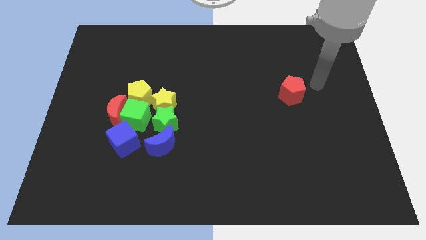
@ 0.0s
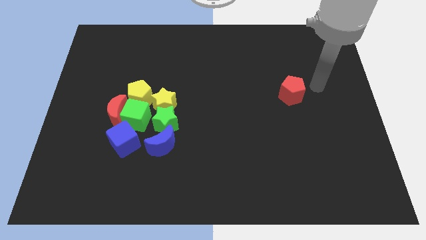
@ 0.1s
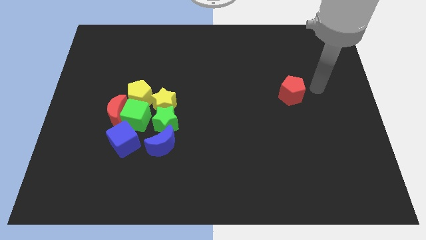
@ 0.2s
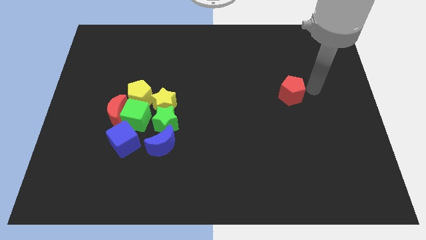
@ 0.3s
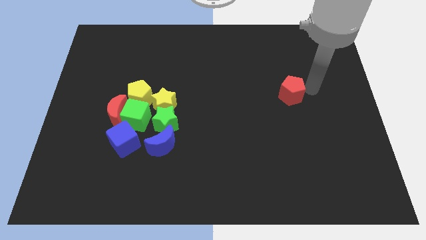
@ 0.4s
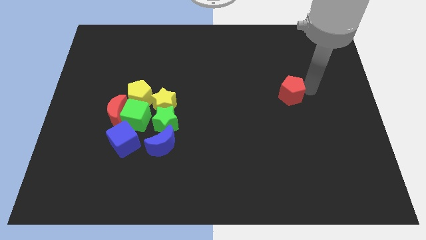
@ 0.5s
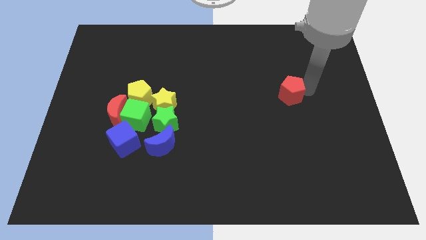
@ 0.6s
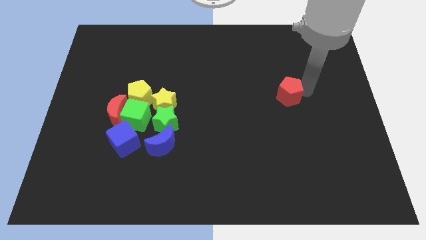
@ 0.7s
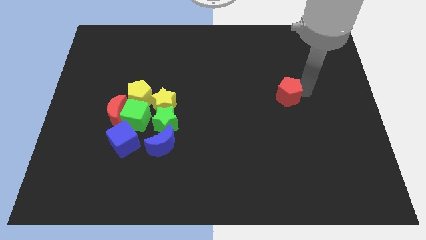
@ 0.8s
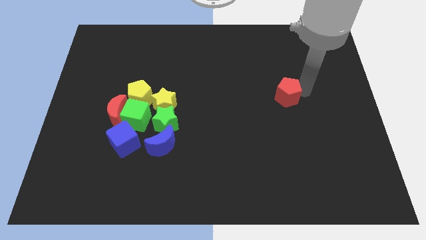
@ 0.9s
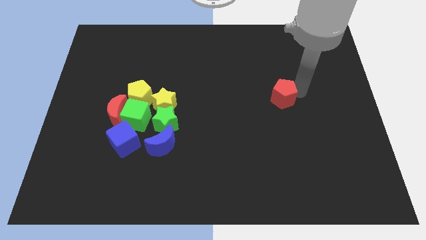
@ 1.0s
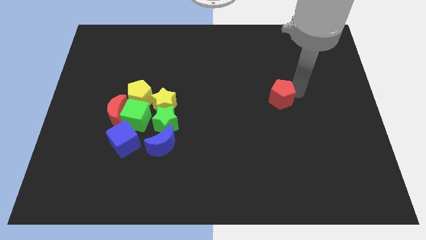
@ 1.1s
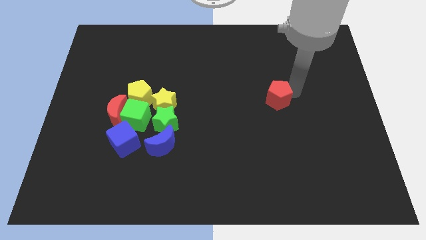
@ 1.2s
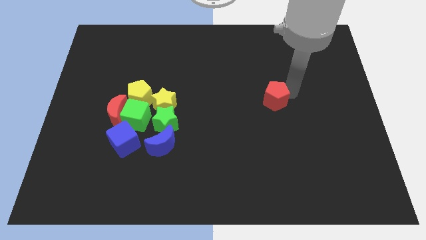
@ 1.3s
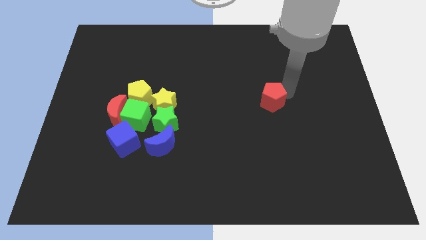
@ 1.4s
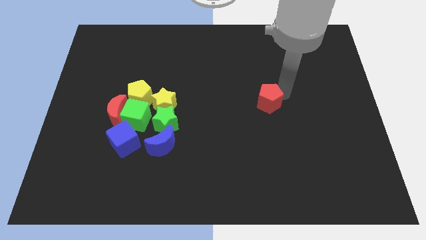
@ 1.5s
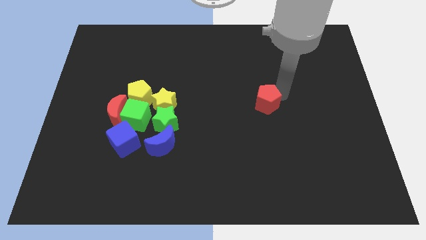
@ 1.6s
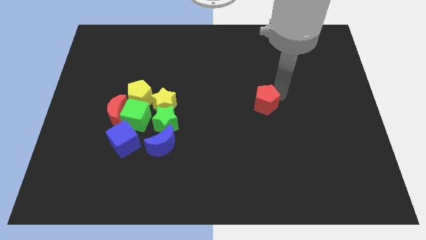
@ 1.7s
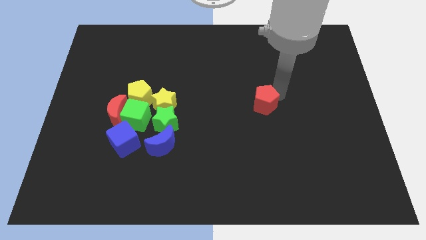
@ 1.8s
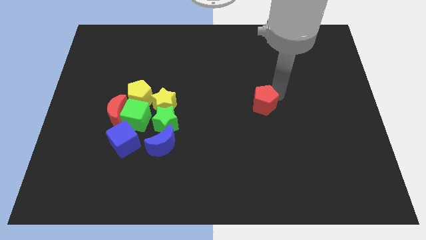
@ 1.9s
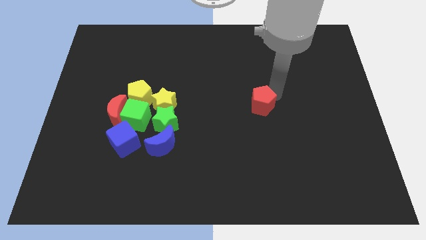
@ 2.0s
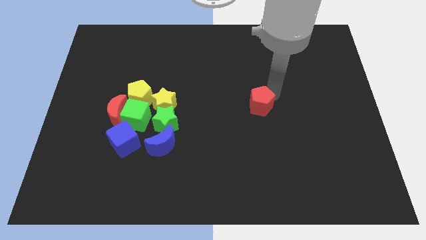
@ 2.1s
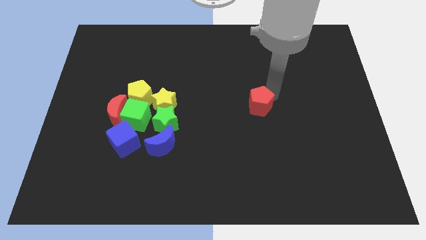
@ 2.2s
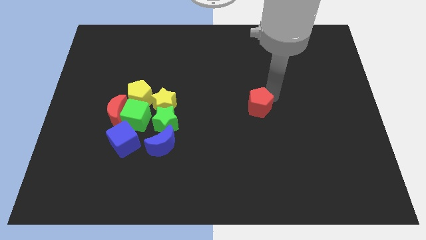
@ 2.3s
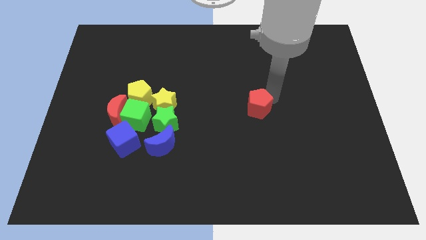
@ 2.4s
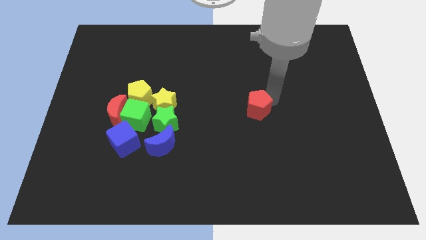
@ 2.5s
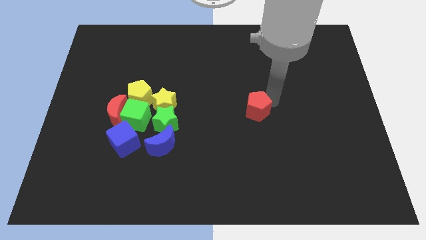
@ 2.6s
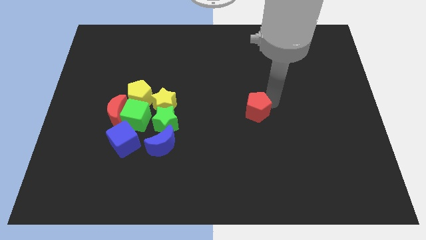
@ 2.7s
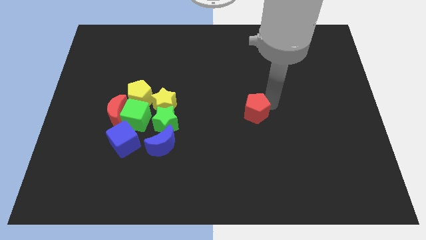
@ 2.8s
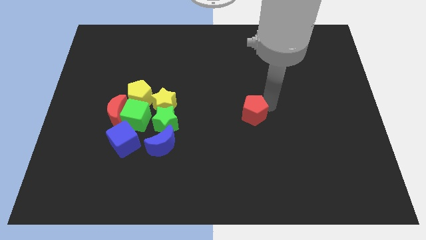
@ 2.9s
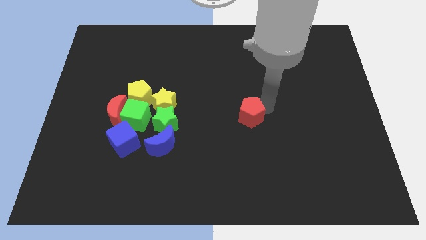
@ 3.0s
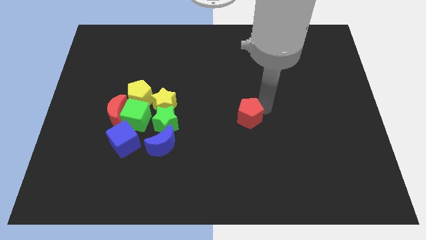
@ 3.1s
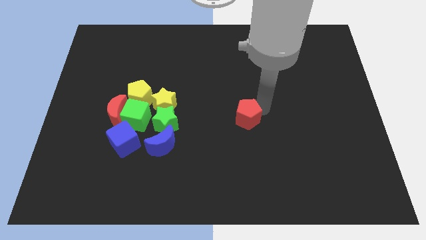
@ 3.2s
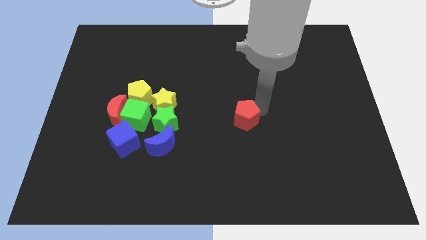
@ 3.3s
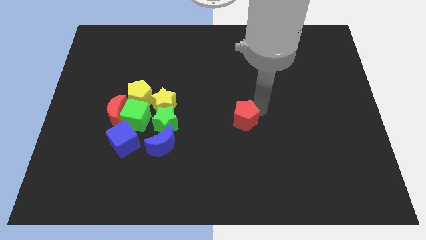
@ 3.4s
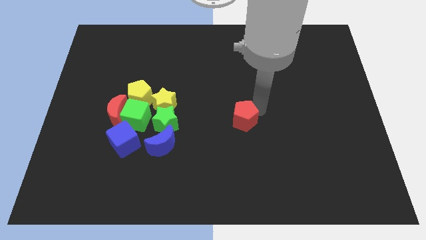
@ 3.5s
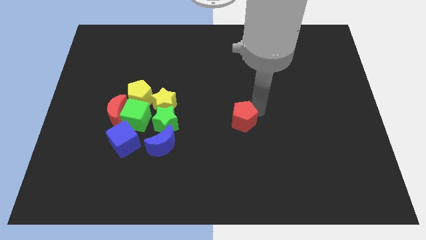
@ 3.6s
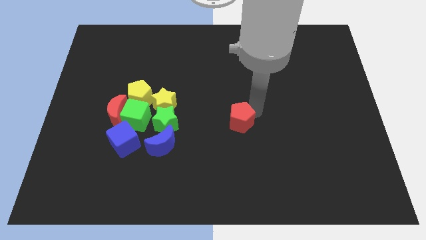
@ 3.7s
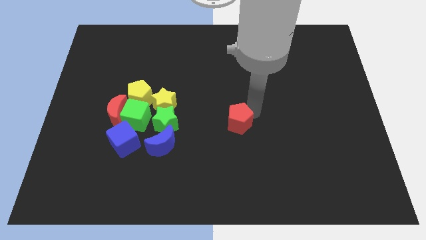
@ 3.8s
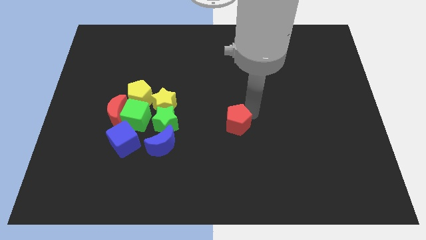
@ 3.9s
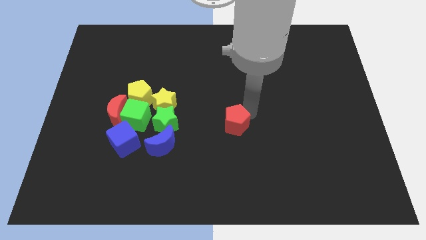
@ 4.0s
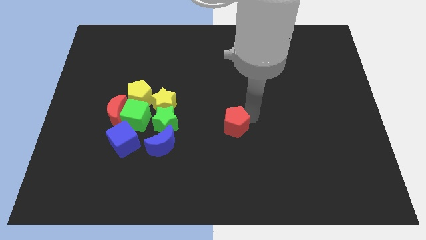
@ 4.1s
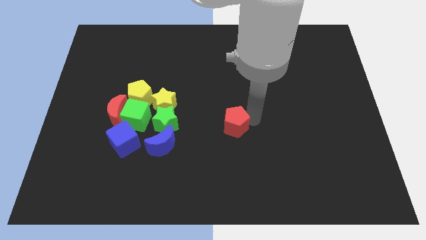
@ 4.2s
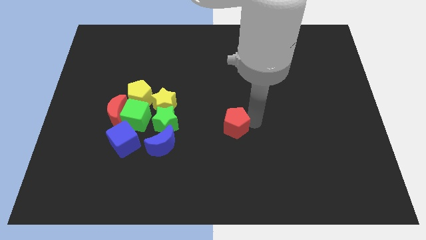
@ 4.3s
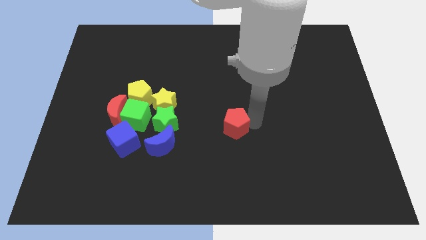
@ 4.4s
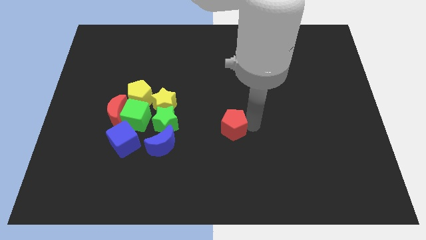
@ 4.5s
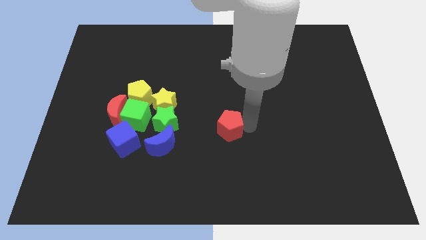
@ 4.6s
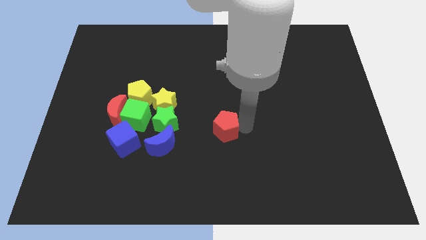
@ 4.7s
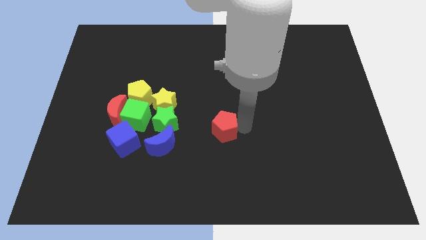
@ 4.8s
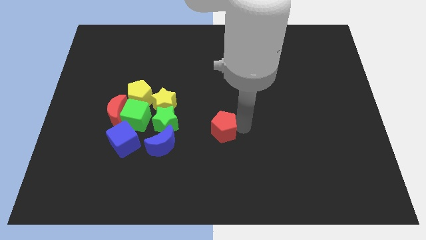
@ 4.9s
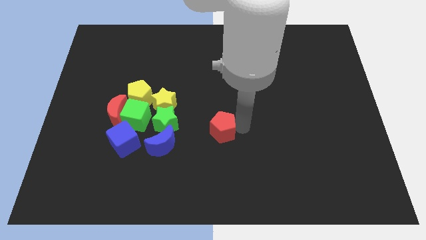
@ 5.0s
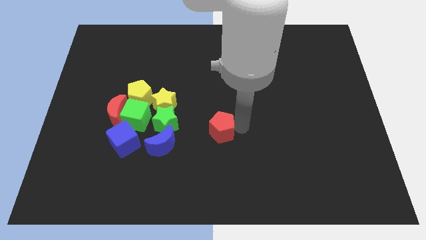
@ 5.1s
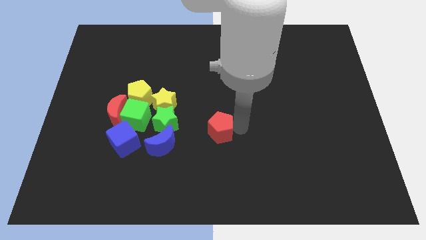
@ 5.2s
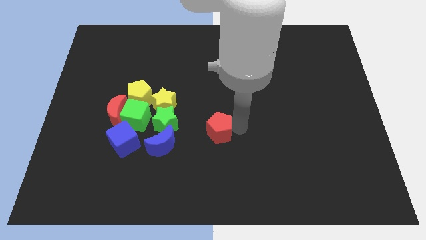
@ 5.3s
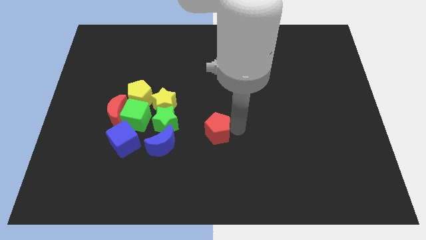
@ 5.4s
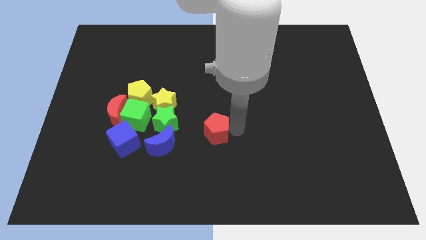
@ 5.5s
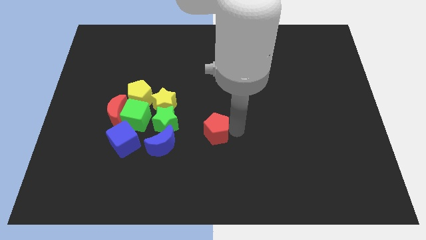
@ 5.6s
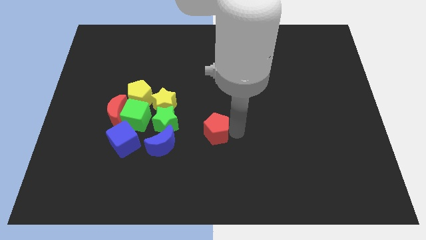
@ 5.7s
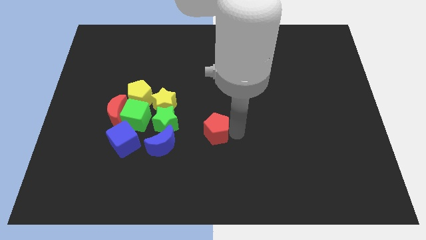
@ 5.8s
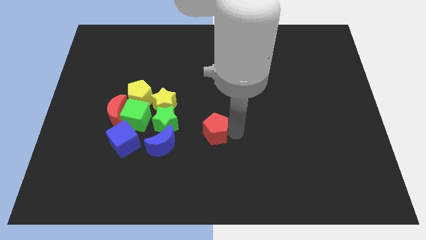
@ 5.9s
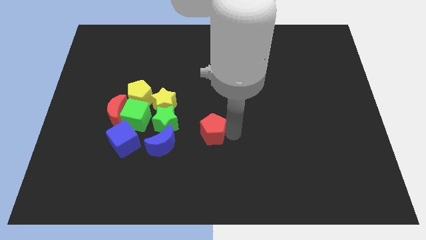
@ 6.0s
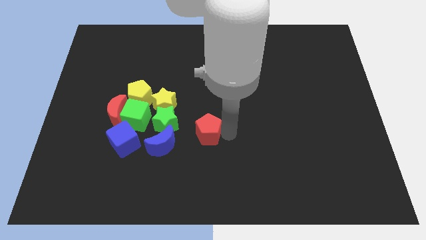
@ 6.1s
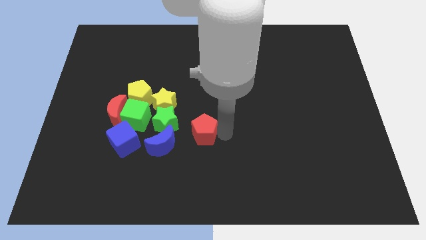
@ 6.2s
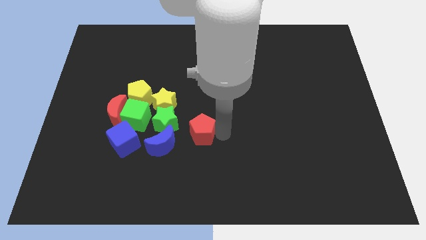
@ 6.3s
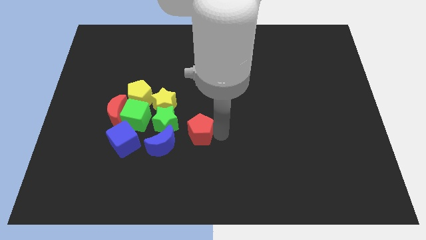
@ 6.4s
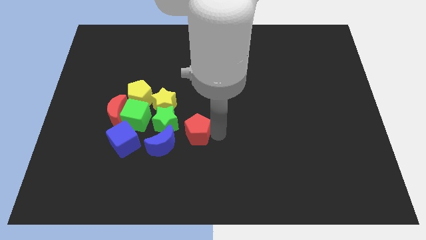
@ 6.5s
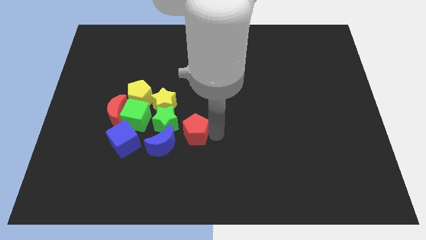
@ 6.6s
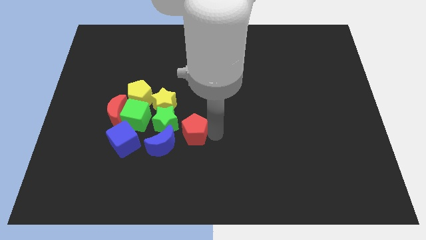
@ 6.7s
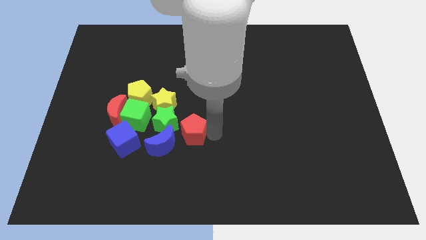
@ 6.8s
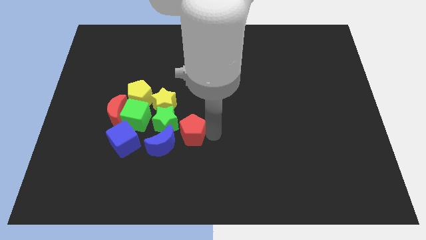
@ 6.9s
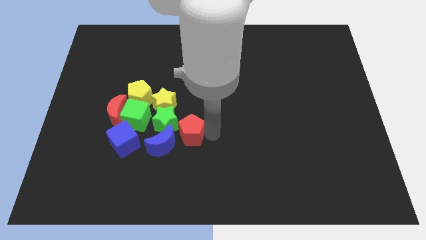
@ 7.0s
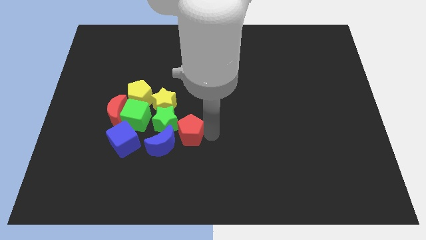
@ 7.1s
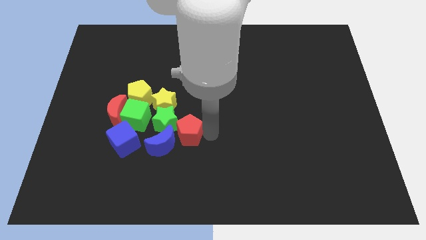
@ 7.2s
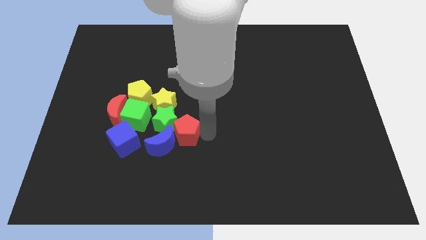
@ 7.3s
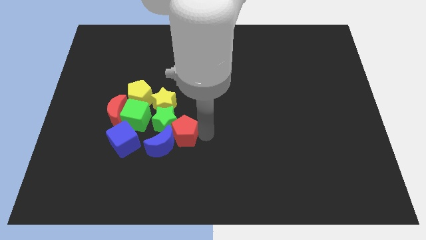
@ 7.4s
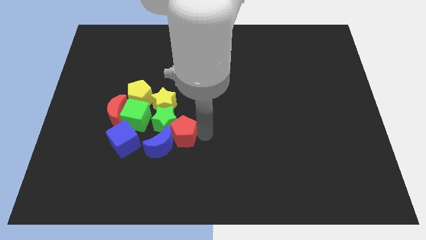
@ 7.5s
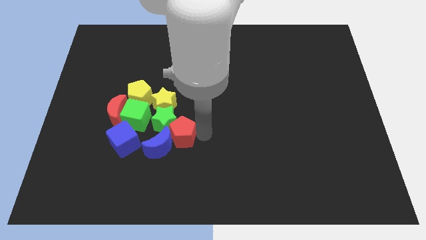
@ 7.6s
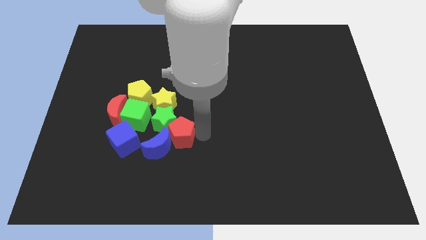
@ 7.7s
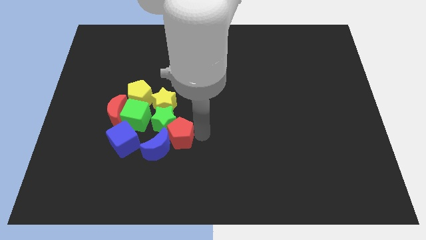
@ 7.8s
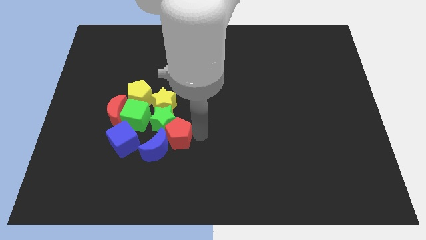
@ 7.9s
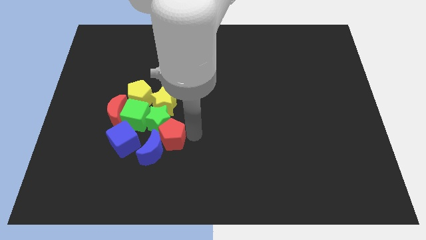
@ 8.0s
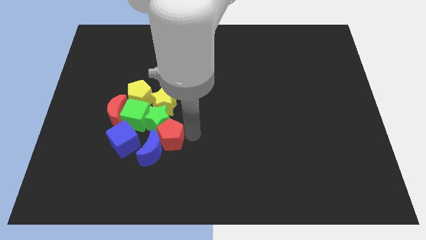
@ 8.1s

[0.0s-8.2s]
push the red pentagon to the group of blocks

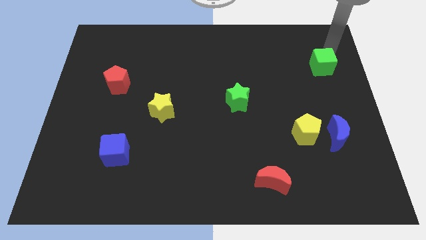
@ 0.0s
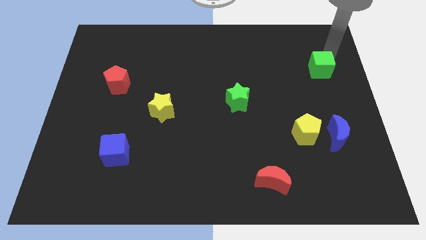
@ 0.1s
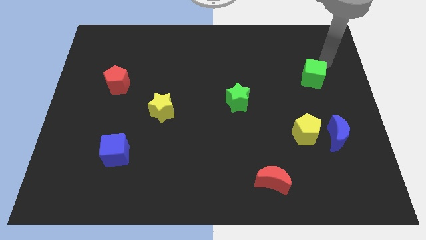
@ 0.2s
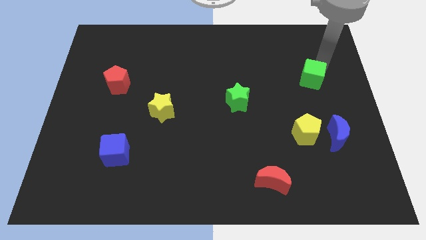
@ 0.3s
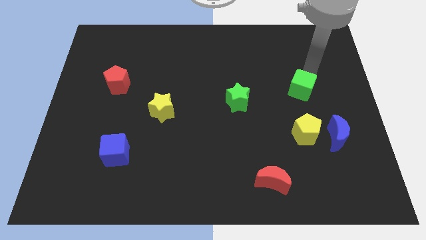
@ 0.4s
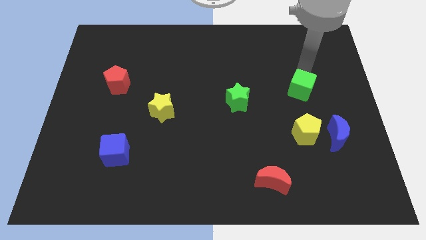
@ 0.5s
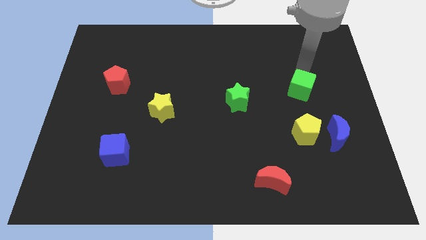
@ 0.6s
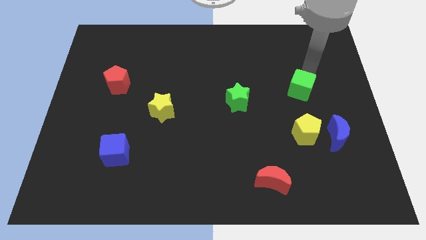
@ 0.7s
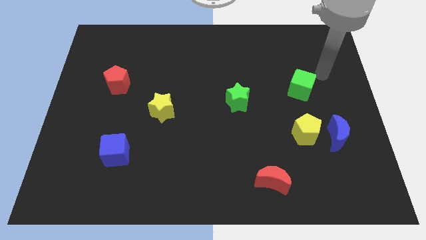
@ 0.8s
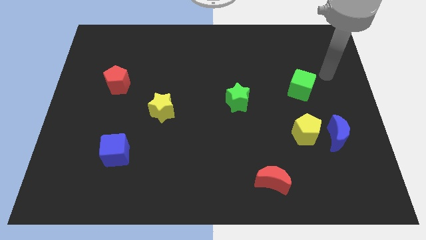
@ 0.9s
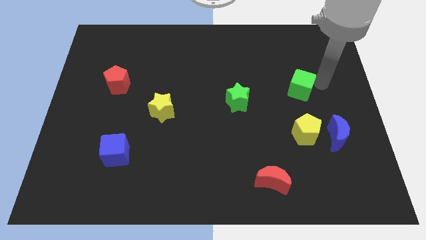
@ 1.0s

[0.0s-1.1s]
push the green cube to the top of the yellow pentagon
